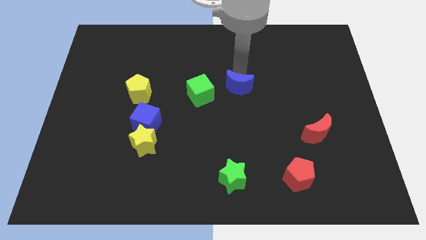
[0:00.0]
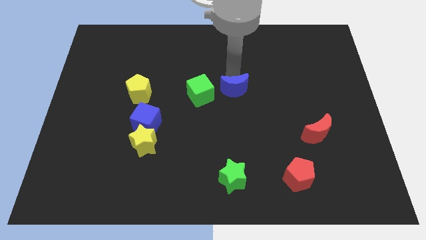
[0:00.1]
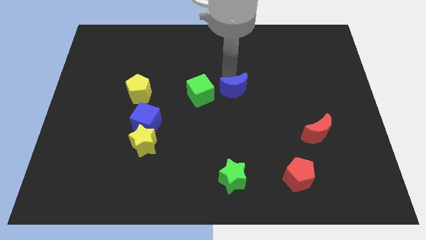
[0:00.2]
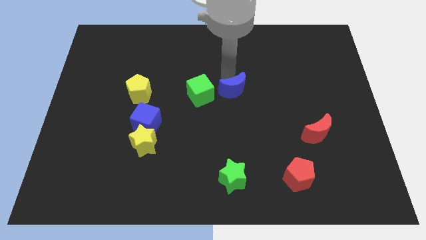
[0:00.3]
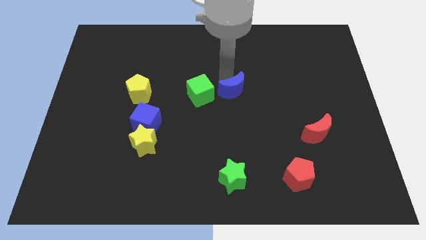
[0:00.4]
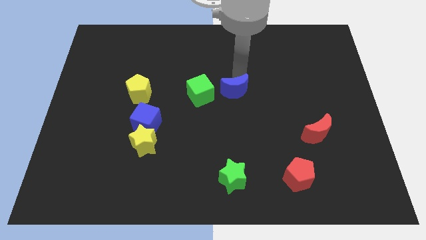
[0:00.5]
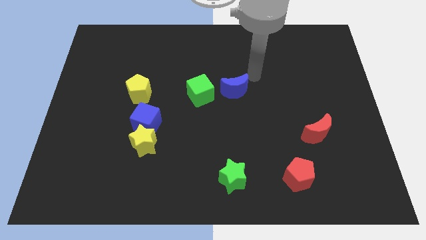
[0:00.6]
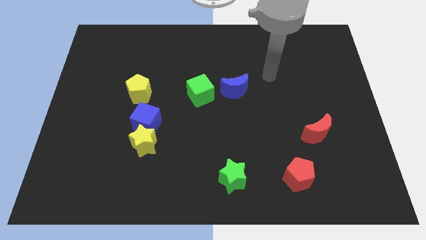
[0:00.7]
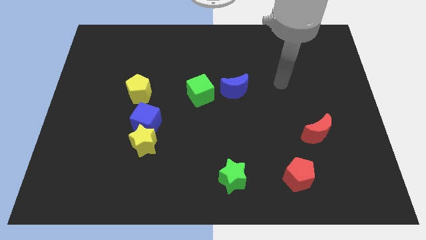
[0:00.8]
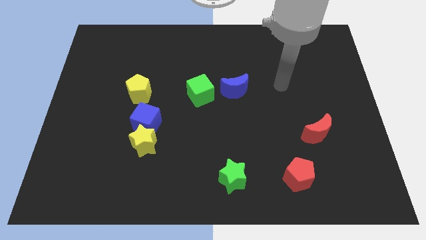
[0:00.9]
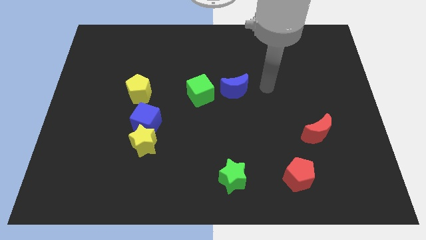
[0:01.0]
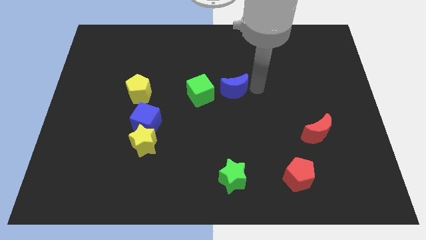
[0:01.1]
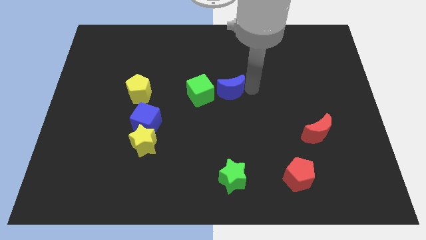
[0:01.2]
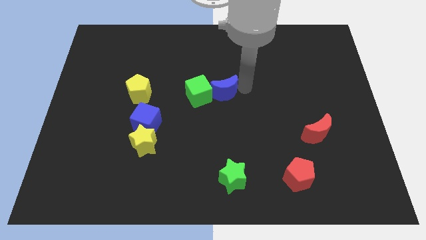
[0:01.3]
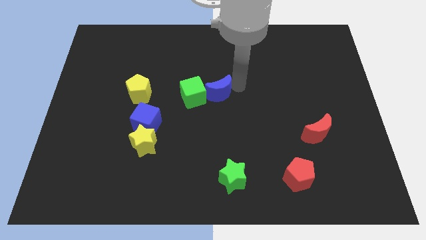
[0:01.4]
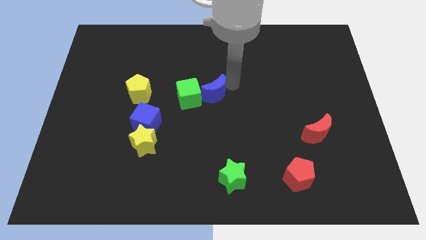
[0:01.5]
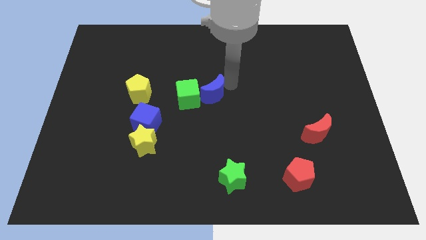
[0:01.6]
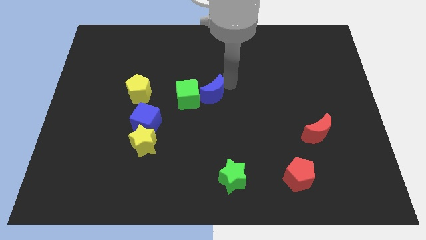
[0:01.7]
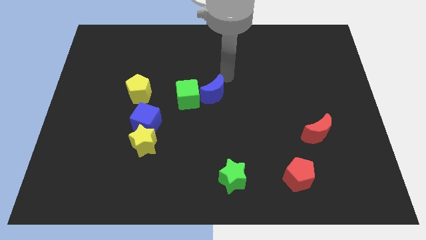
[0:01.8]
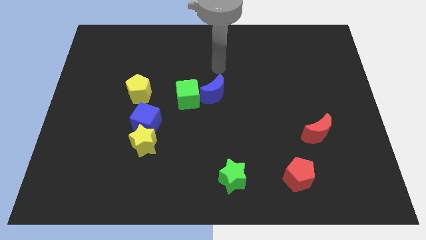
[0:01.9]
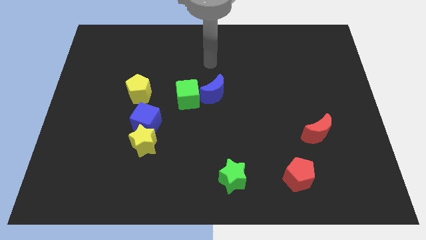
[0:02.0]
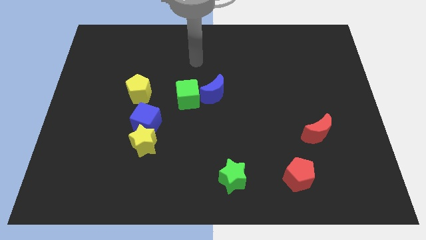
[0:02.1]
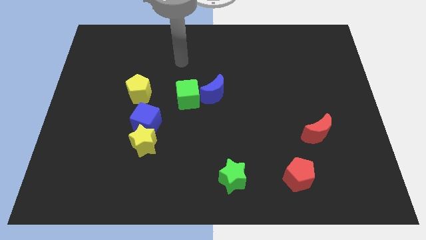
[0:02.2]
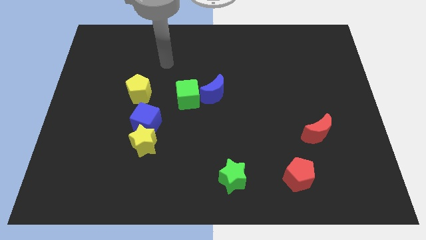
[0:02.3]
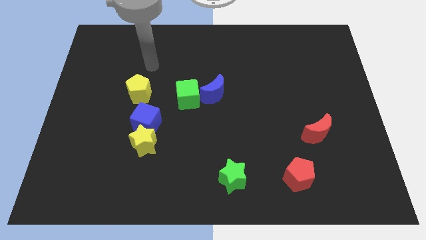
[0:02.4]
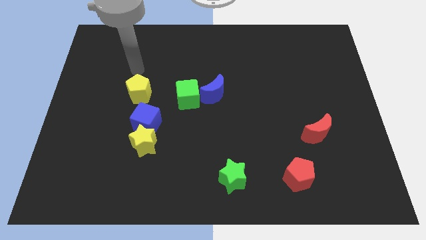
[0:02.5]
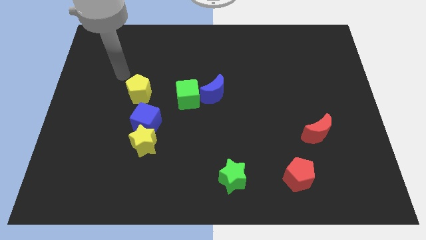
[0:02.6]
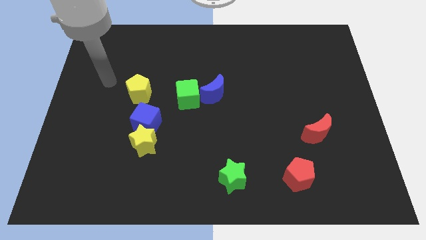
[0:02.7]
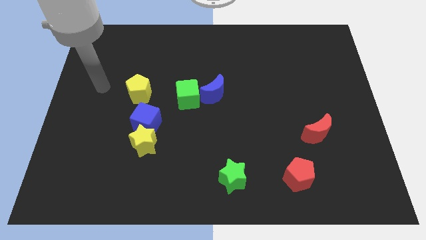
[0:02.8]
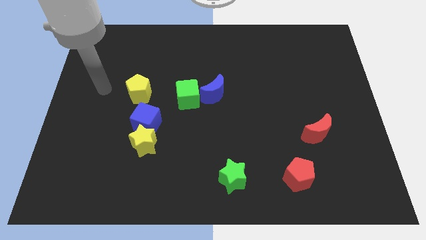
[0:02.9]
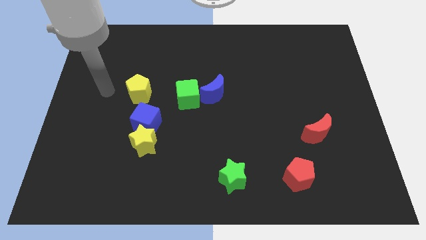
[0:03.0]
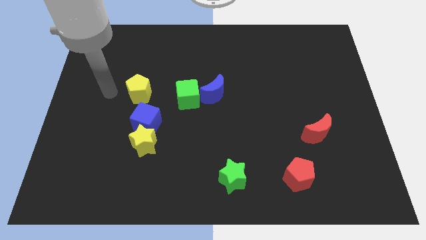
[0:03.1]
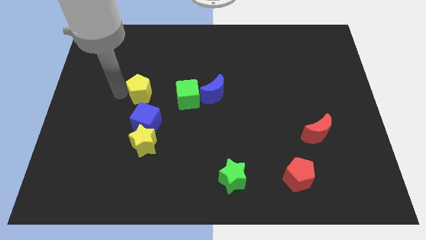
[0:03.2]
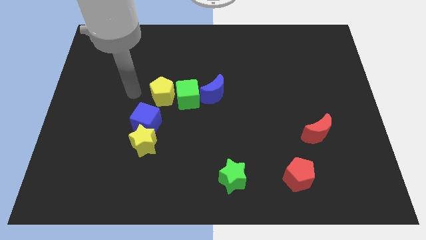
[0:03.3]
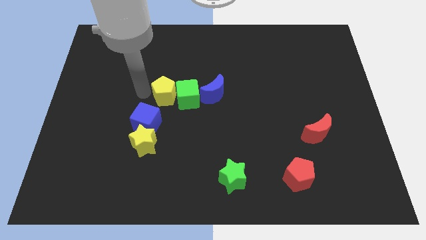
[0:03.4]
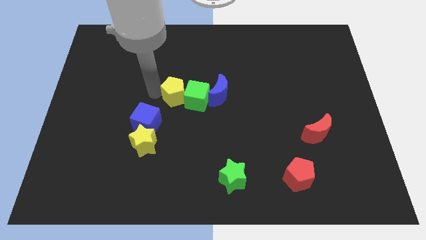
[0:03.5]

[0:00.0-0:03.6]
drag the yellow pentagon and the blue moon close to the green cube

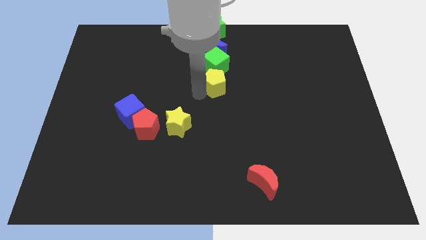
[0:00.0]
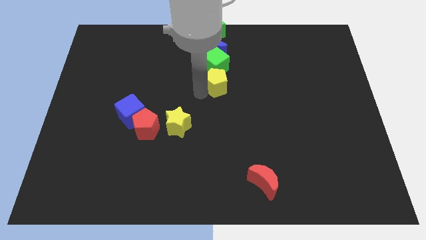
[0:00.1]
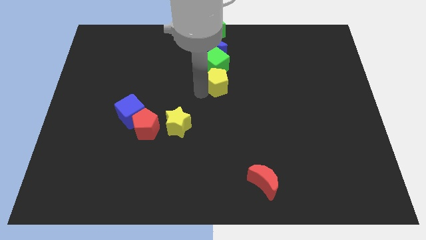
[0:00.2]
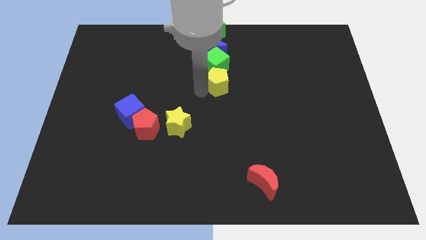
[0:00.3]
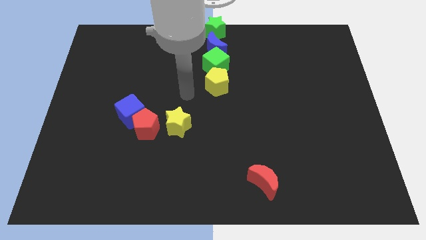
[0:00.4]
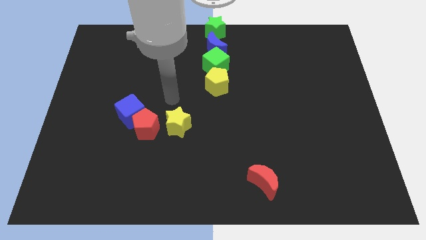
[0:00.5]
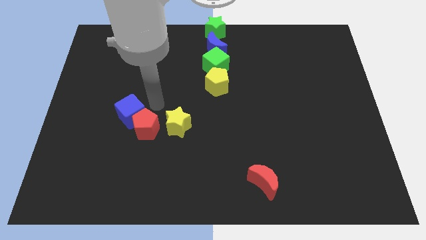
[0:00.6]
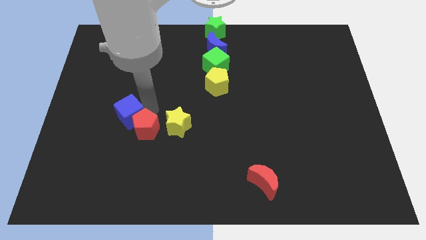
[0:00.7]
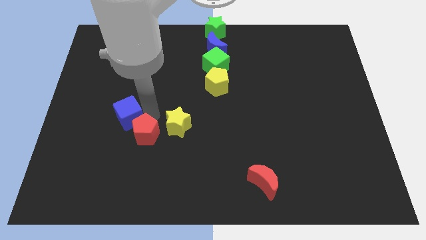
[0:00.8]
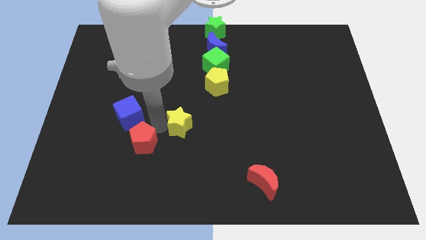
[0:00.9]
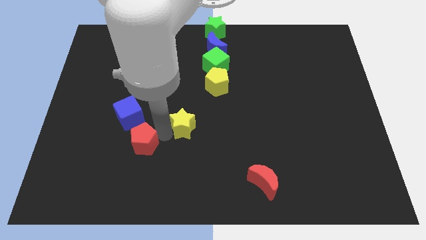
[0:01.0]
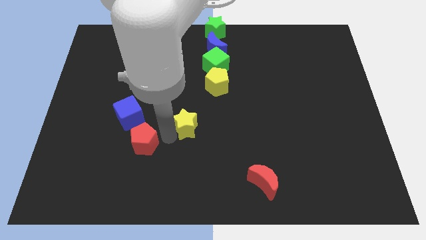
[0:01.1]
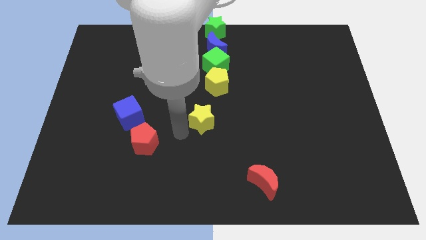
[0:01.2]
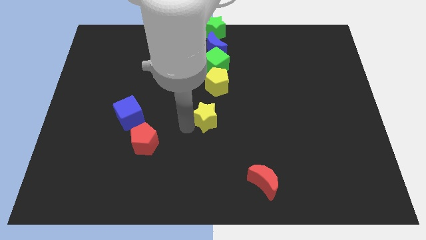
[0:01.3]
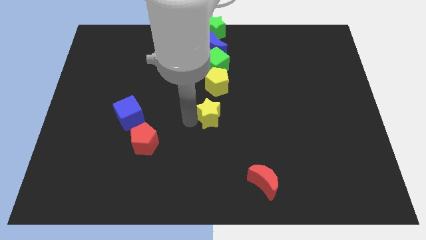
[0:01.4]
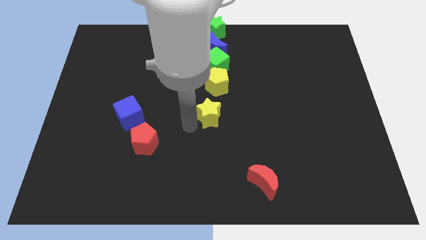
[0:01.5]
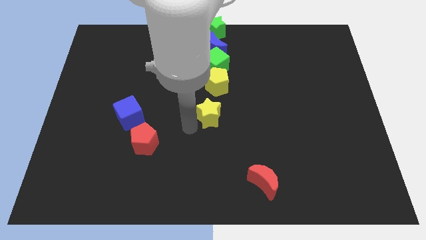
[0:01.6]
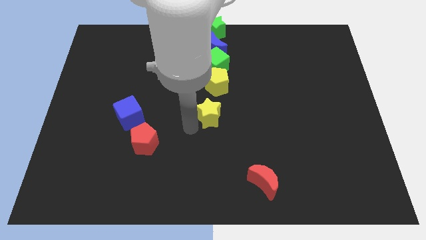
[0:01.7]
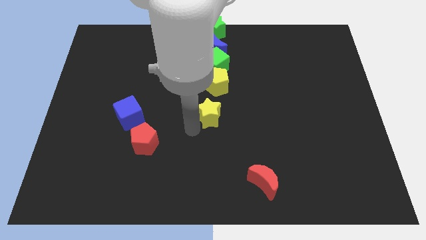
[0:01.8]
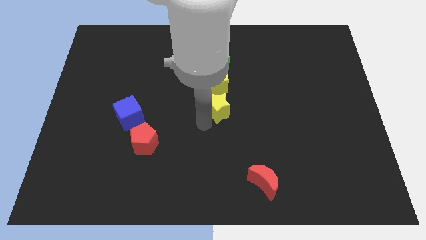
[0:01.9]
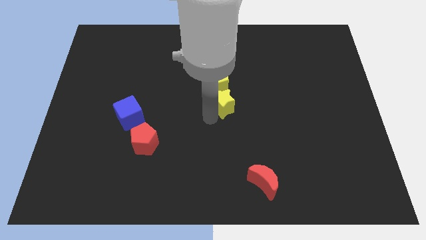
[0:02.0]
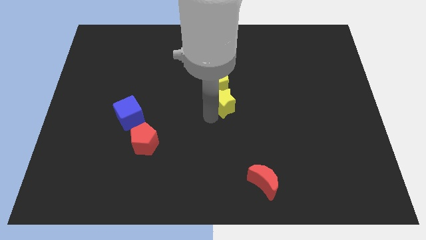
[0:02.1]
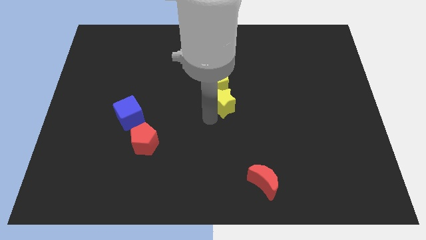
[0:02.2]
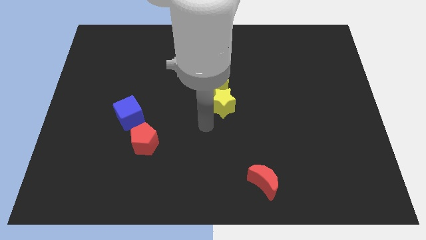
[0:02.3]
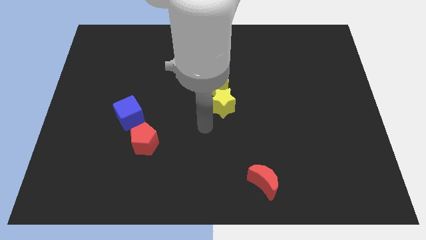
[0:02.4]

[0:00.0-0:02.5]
move the yellow star below the yellow pentagon

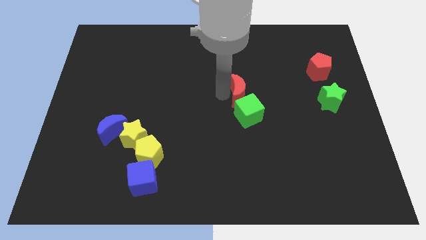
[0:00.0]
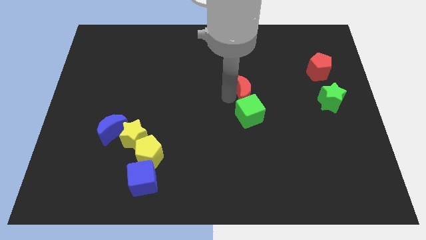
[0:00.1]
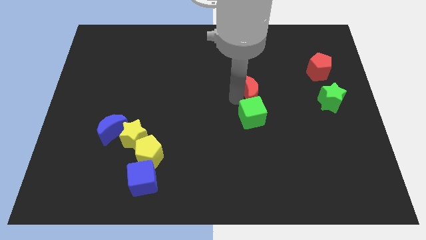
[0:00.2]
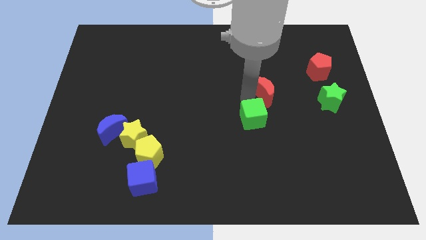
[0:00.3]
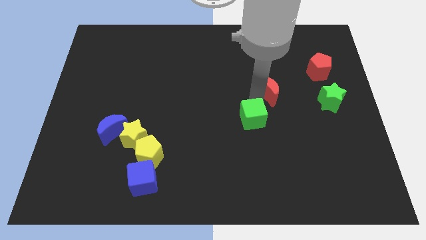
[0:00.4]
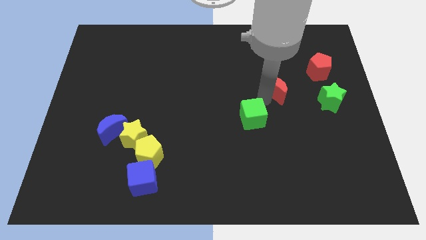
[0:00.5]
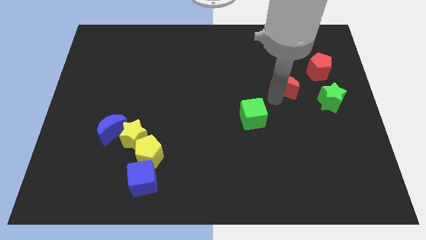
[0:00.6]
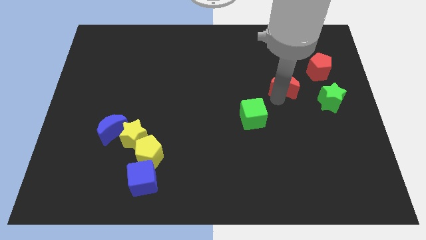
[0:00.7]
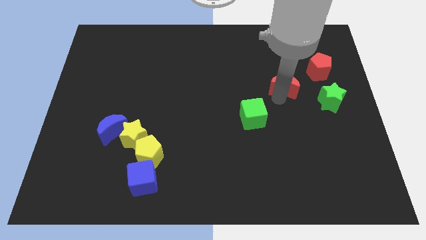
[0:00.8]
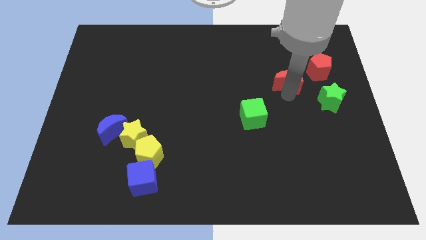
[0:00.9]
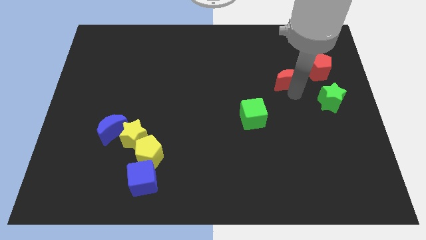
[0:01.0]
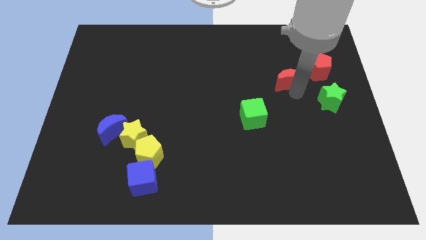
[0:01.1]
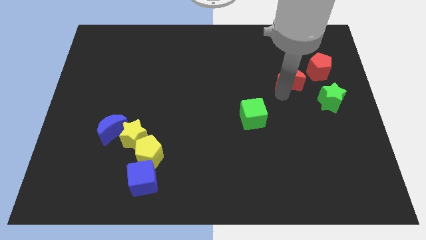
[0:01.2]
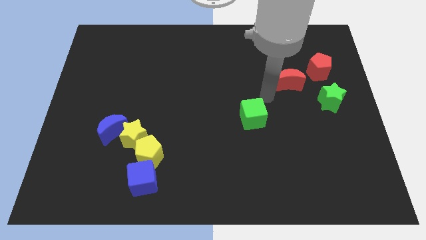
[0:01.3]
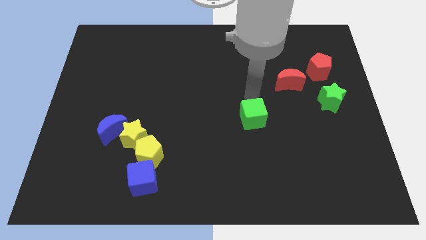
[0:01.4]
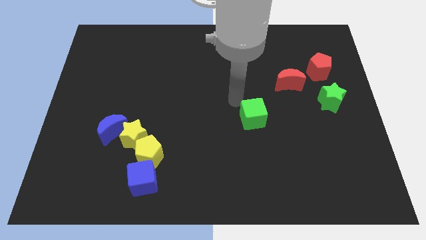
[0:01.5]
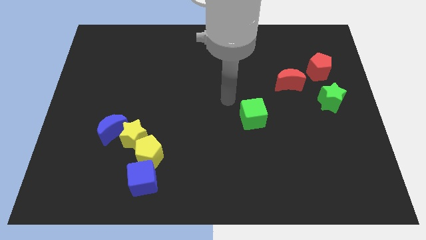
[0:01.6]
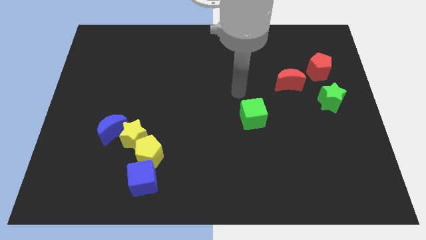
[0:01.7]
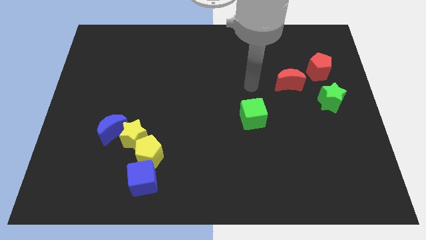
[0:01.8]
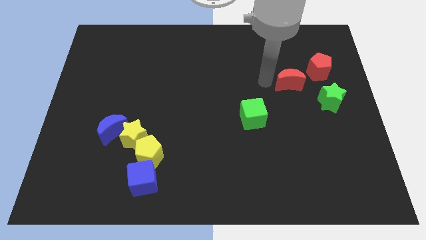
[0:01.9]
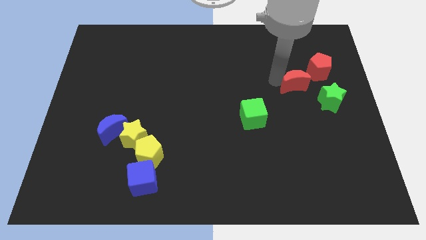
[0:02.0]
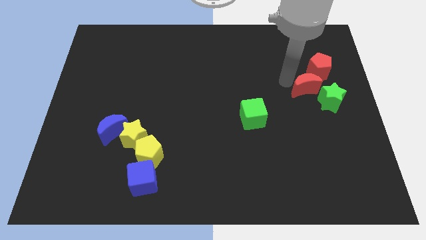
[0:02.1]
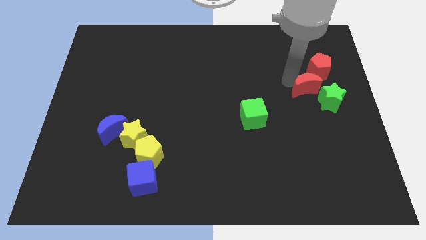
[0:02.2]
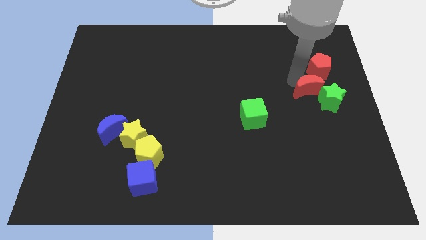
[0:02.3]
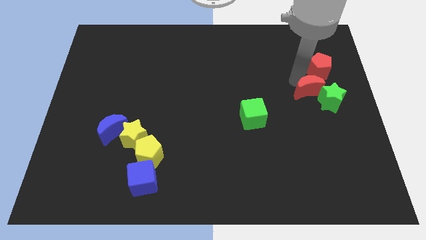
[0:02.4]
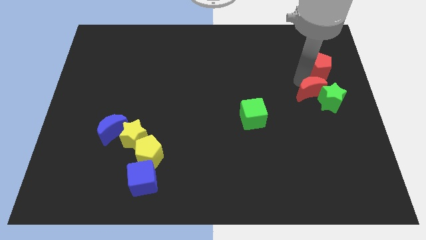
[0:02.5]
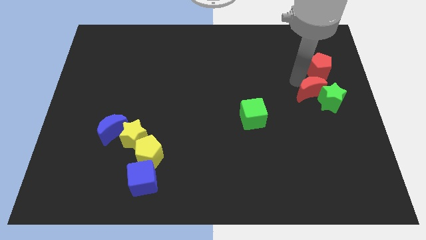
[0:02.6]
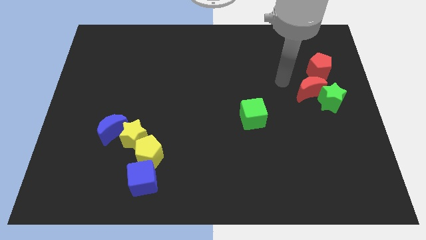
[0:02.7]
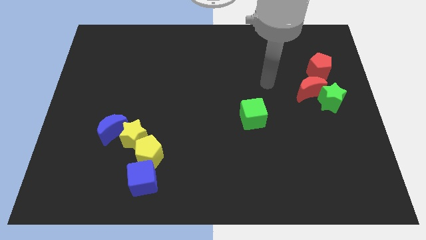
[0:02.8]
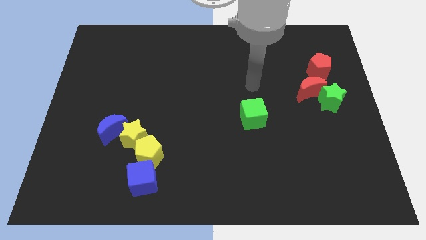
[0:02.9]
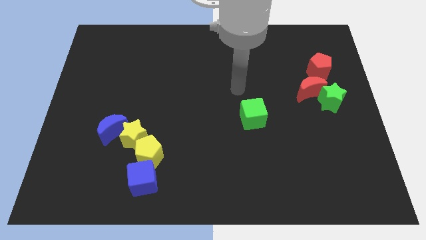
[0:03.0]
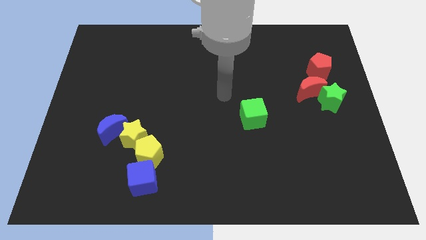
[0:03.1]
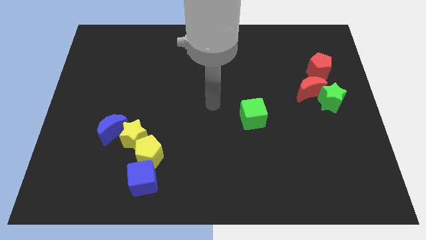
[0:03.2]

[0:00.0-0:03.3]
put the red crescent close to the green star
